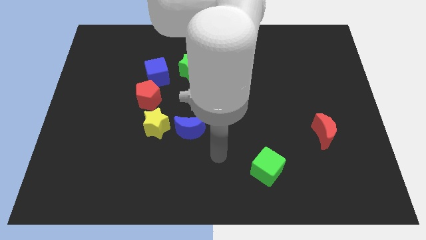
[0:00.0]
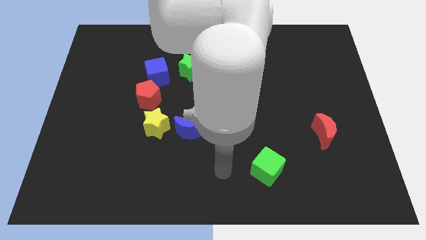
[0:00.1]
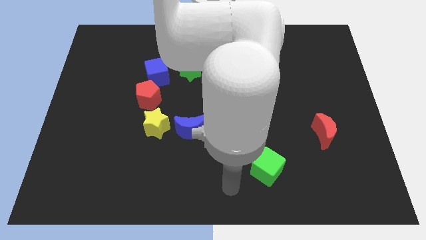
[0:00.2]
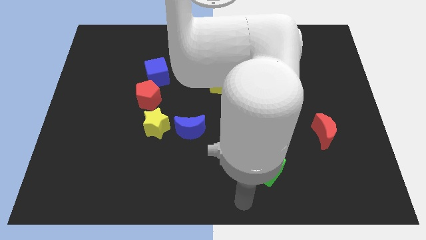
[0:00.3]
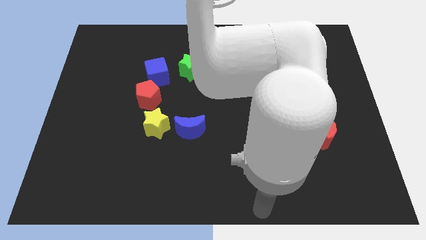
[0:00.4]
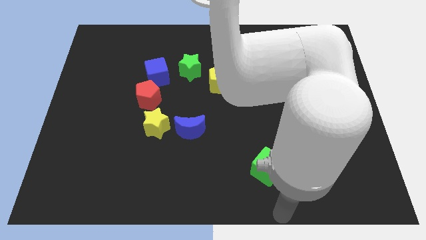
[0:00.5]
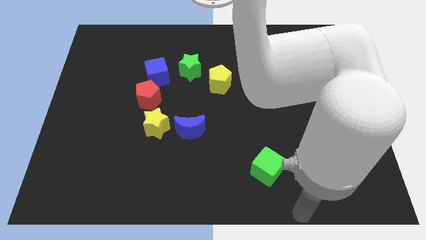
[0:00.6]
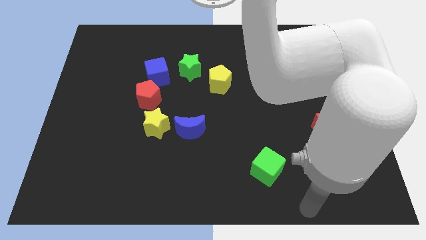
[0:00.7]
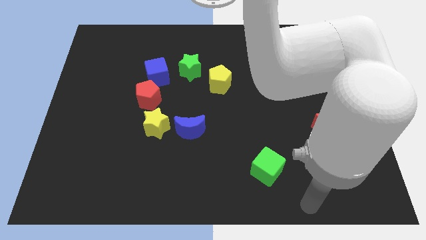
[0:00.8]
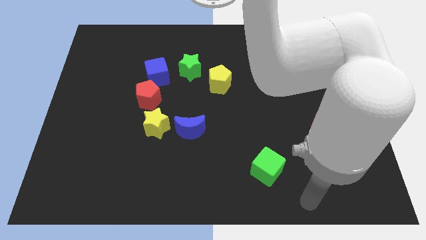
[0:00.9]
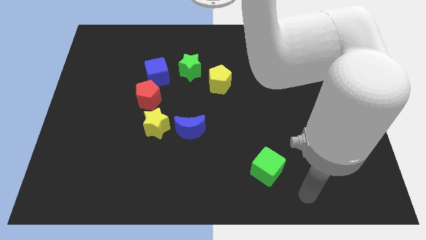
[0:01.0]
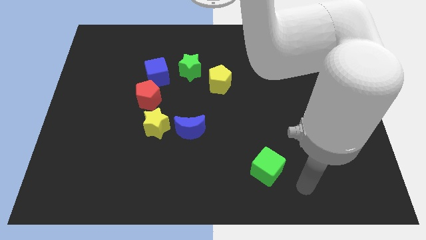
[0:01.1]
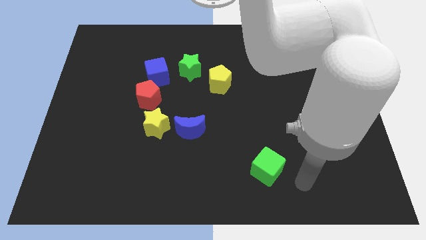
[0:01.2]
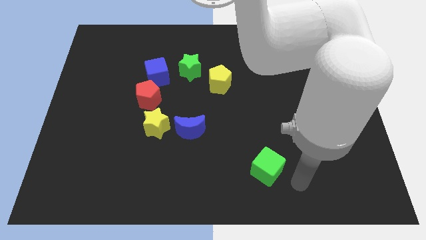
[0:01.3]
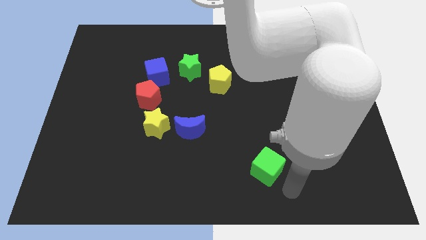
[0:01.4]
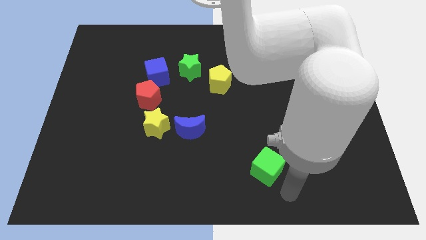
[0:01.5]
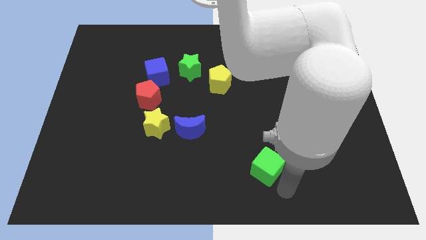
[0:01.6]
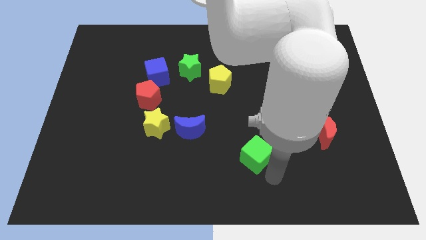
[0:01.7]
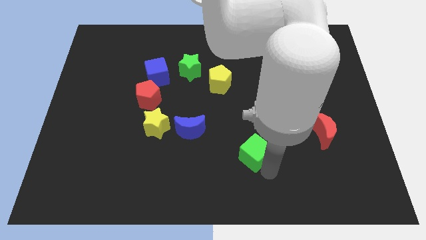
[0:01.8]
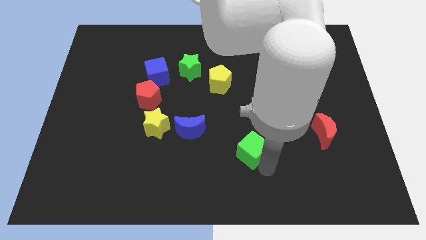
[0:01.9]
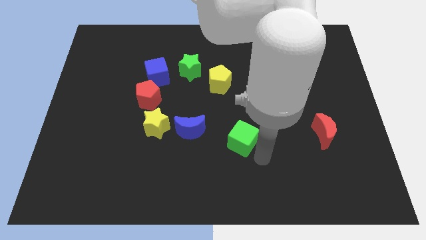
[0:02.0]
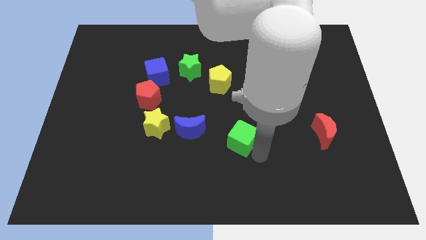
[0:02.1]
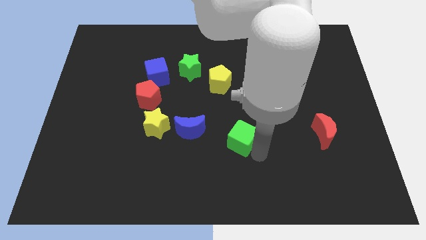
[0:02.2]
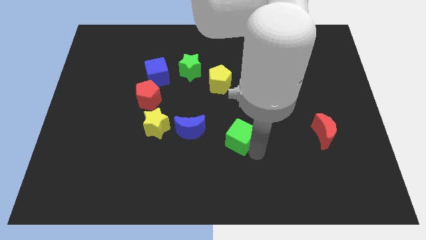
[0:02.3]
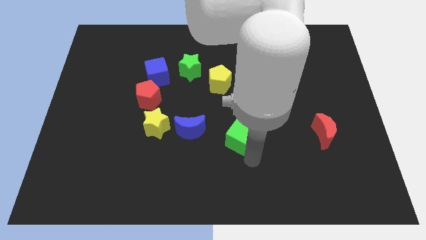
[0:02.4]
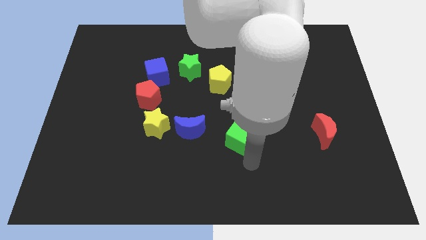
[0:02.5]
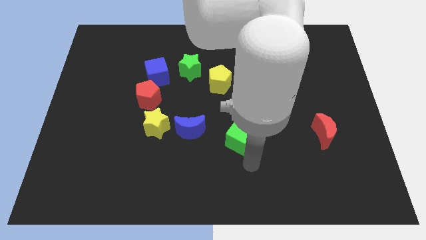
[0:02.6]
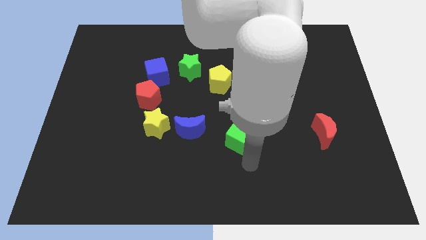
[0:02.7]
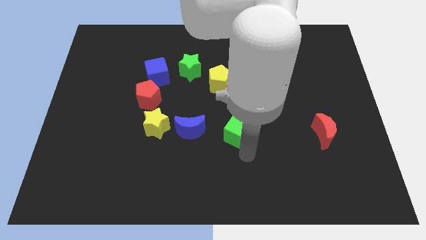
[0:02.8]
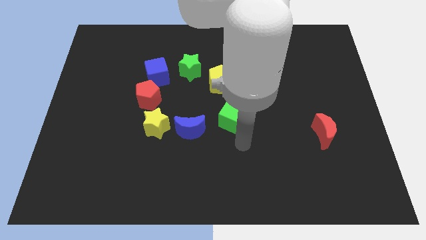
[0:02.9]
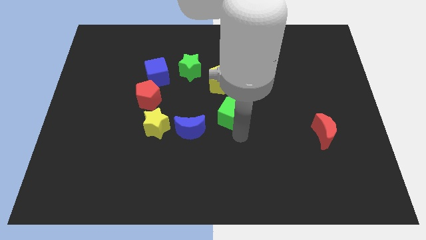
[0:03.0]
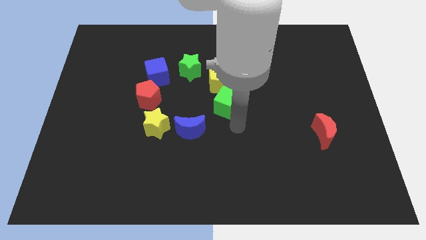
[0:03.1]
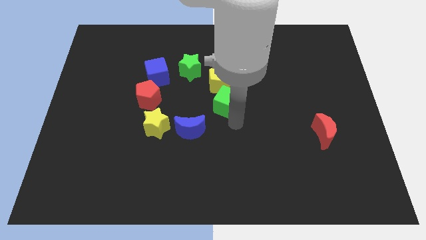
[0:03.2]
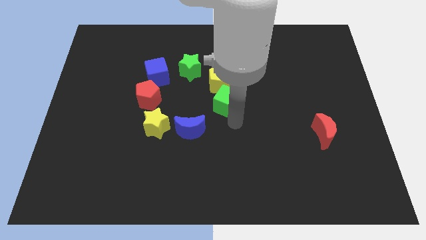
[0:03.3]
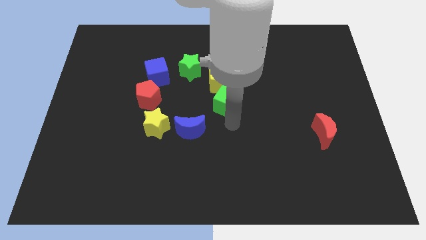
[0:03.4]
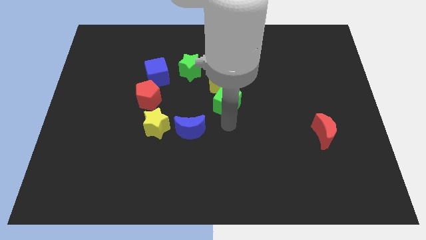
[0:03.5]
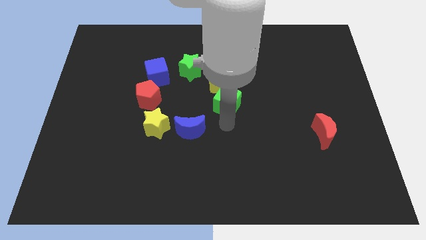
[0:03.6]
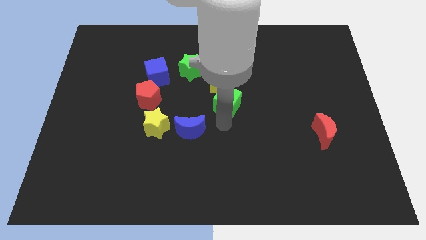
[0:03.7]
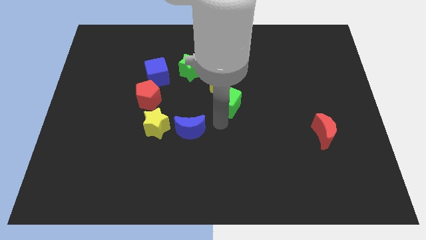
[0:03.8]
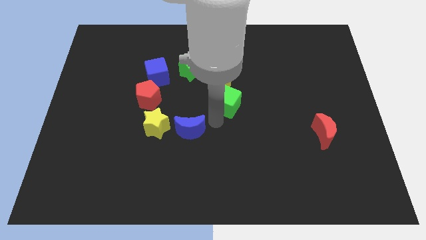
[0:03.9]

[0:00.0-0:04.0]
move the green cube into the yellow pentagon

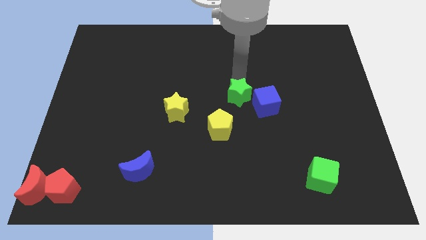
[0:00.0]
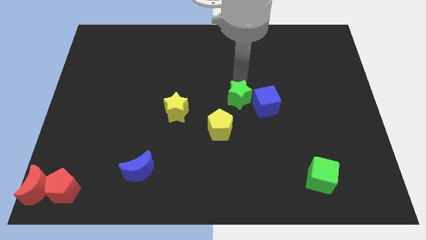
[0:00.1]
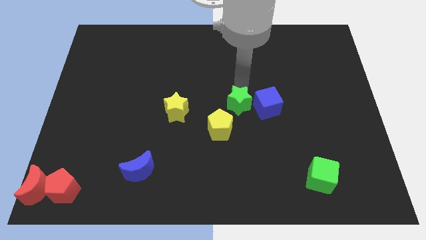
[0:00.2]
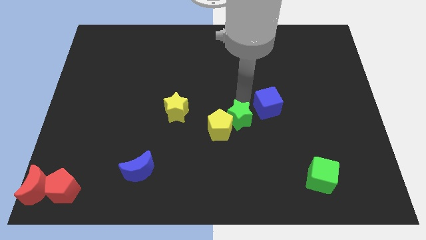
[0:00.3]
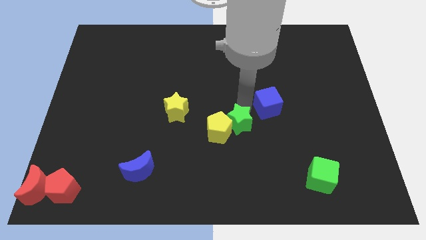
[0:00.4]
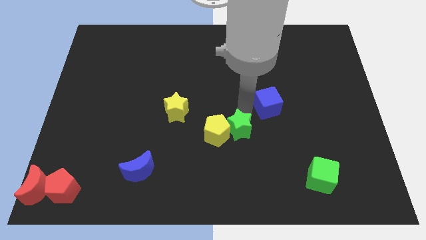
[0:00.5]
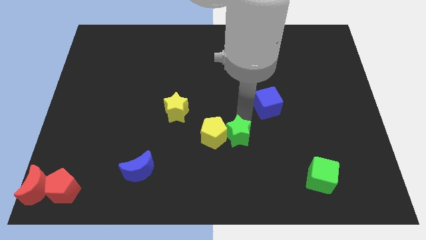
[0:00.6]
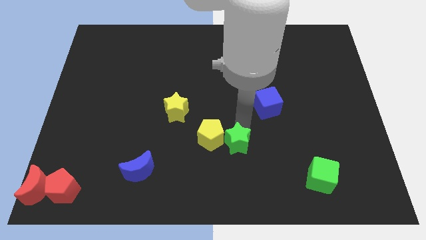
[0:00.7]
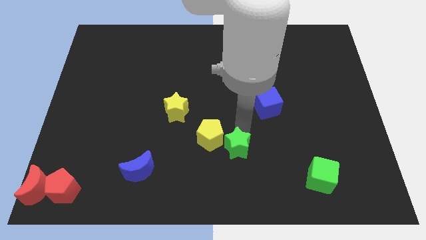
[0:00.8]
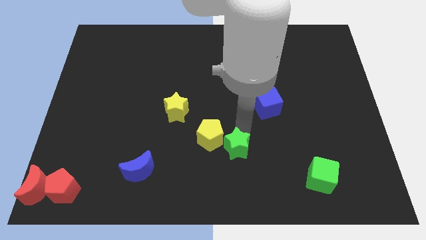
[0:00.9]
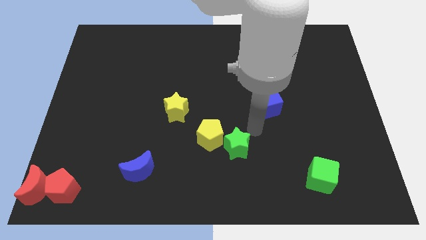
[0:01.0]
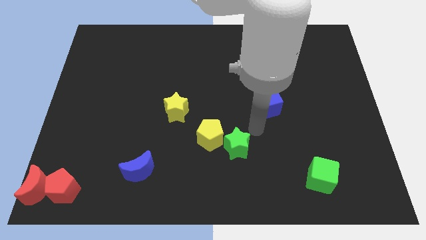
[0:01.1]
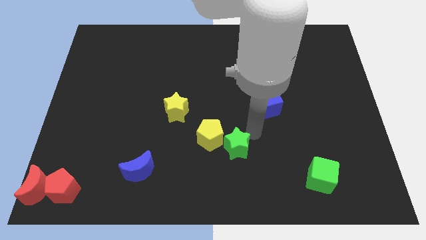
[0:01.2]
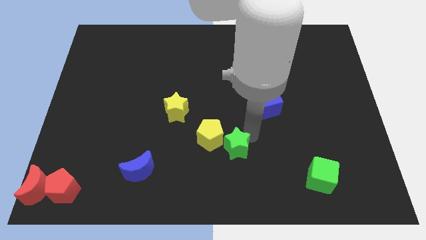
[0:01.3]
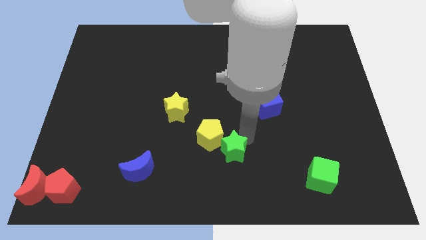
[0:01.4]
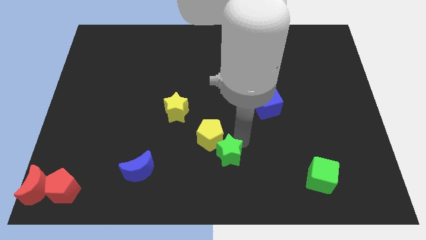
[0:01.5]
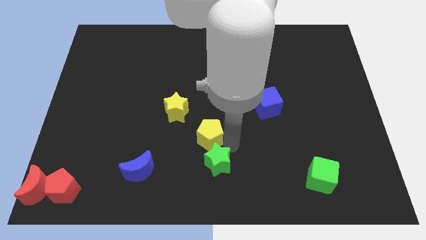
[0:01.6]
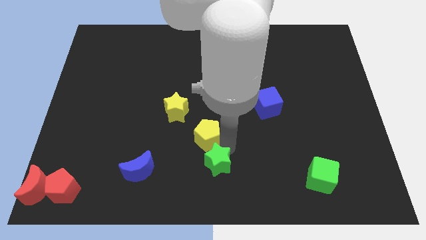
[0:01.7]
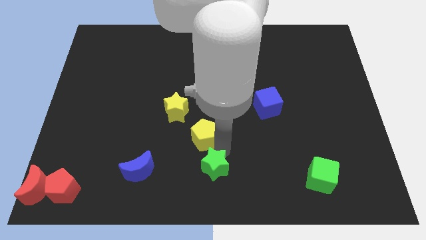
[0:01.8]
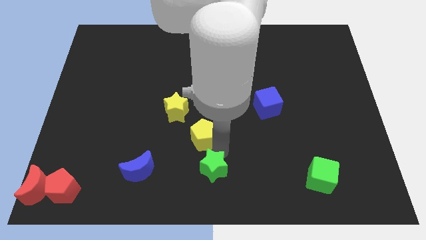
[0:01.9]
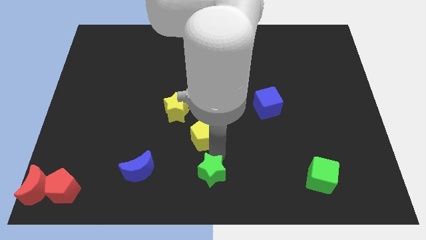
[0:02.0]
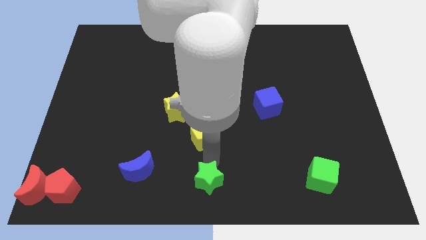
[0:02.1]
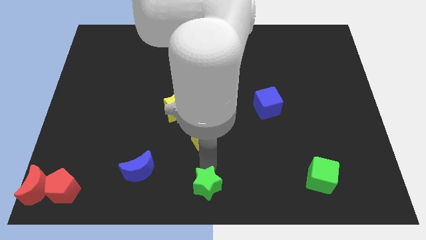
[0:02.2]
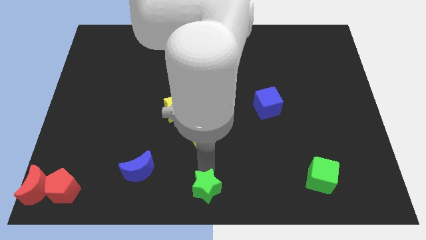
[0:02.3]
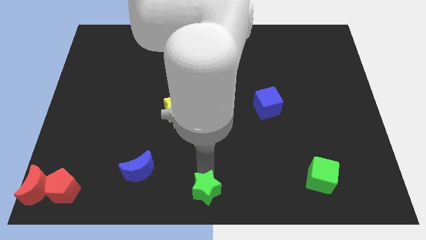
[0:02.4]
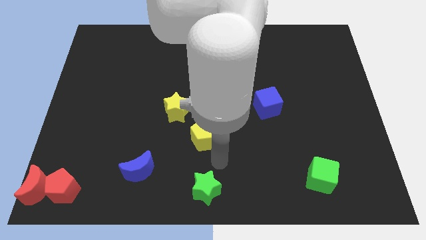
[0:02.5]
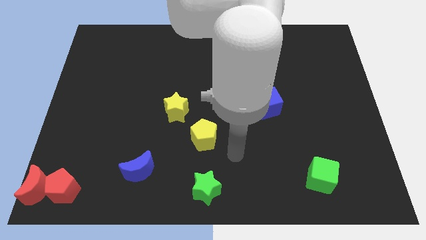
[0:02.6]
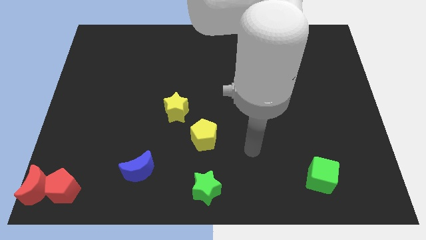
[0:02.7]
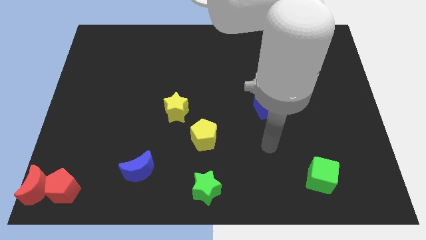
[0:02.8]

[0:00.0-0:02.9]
move the green star to the bottom center

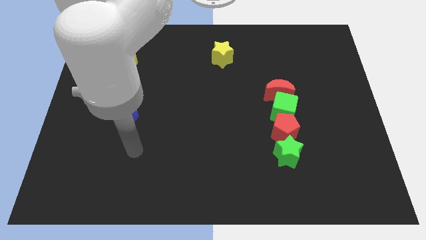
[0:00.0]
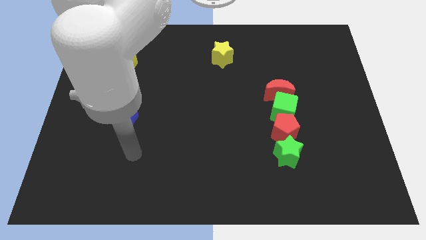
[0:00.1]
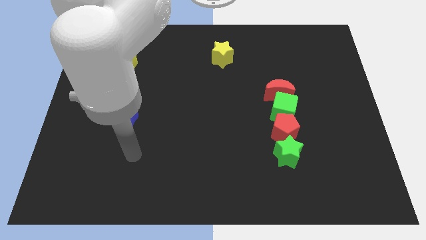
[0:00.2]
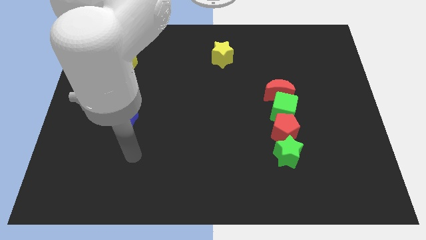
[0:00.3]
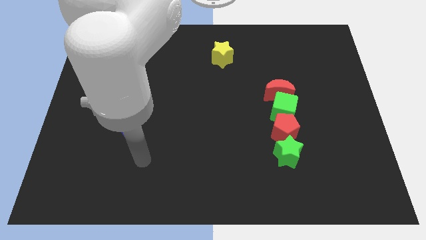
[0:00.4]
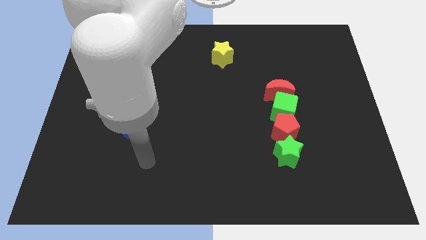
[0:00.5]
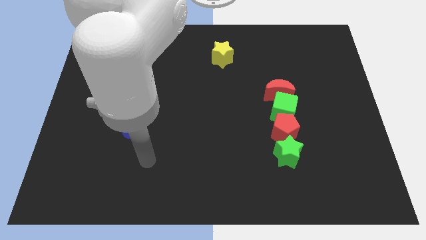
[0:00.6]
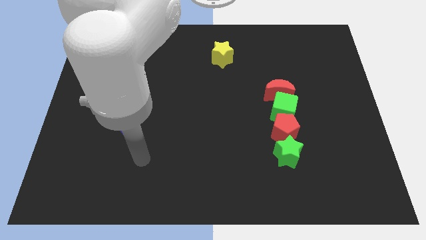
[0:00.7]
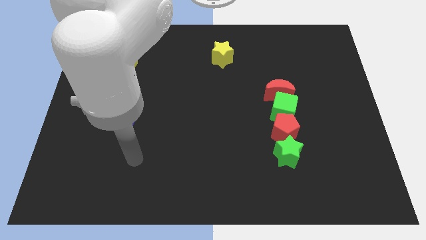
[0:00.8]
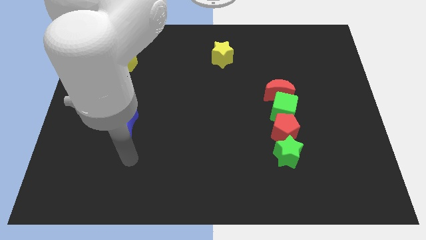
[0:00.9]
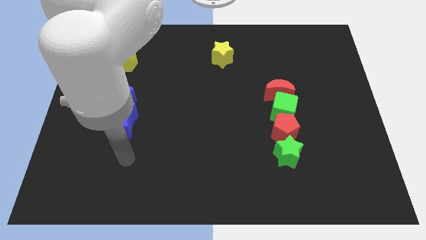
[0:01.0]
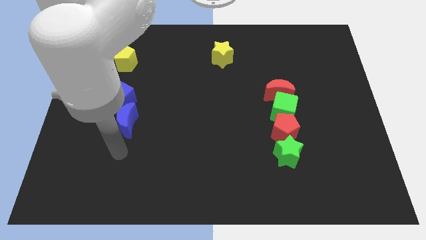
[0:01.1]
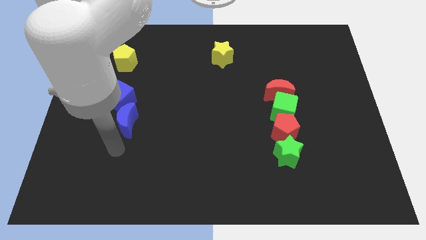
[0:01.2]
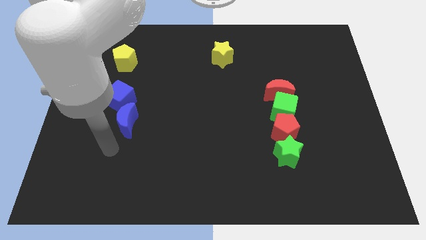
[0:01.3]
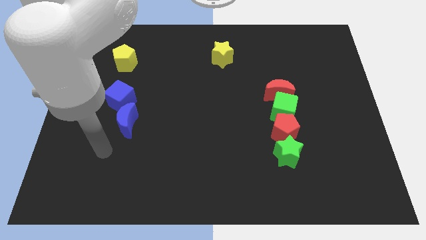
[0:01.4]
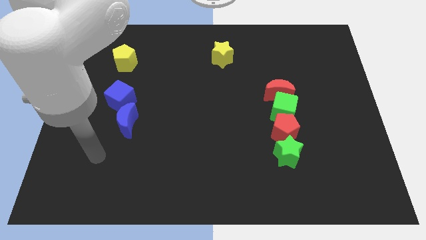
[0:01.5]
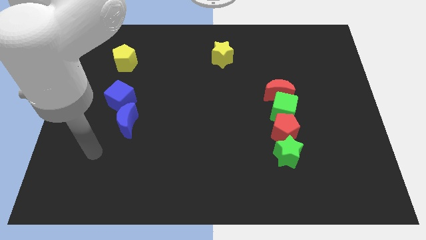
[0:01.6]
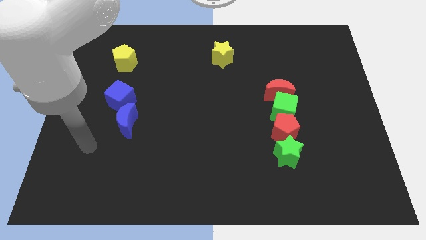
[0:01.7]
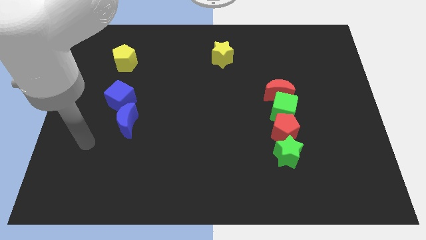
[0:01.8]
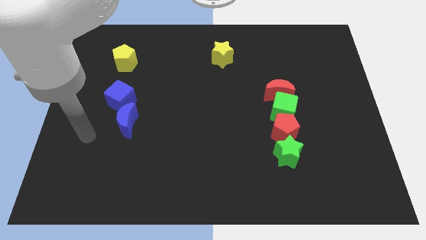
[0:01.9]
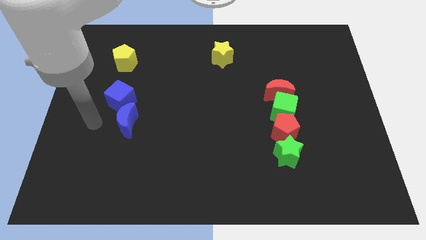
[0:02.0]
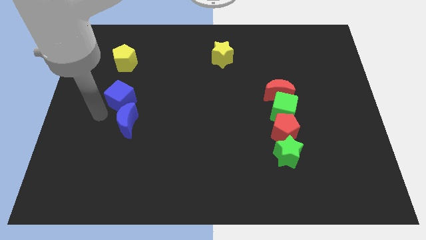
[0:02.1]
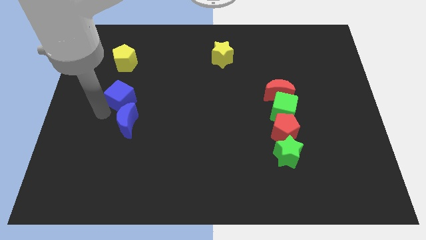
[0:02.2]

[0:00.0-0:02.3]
move the arm to the bottom of the blue cube
